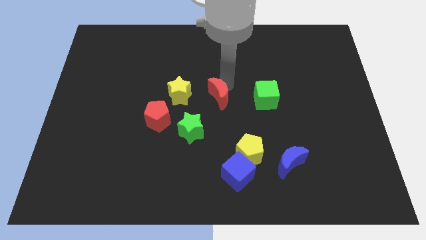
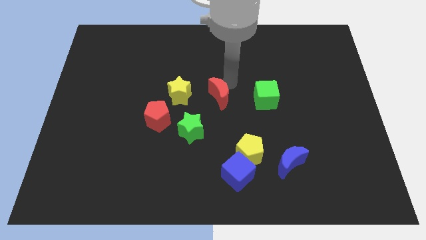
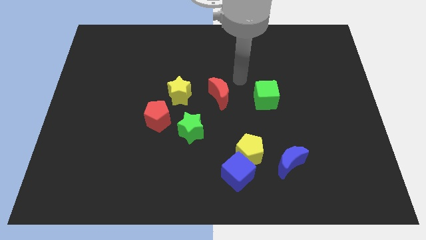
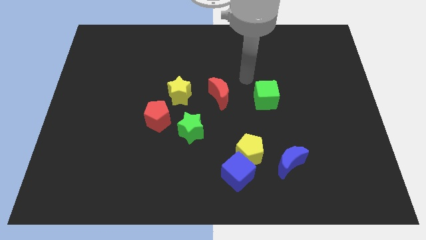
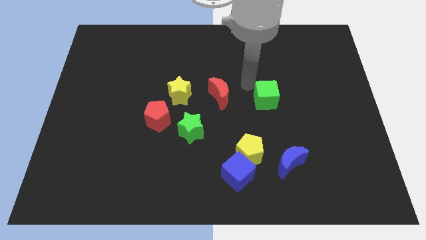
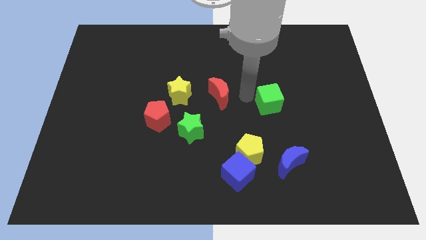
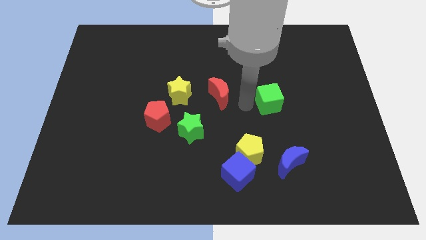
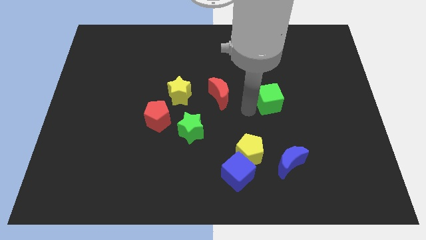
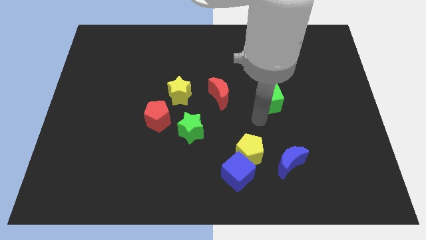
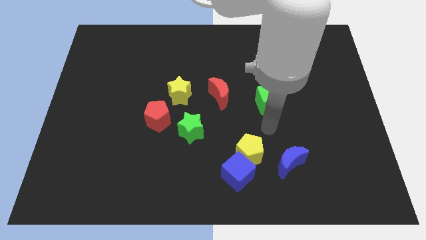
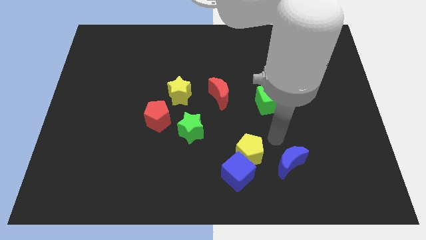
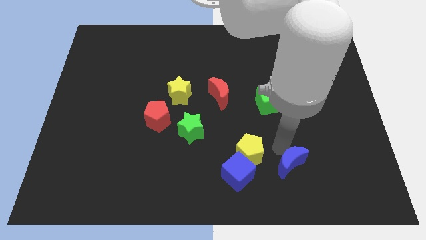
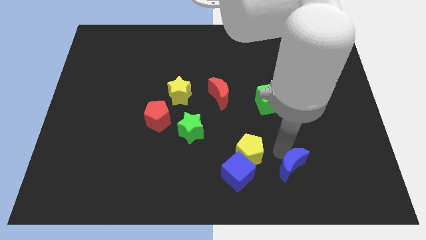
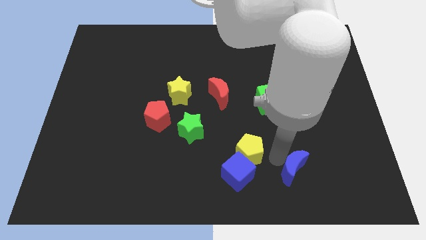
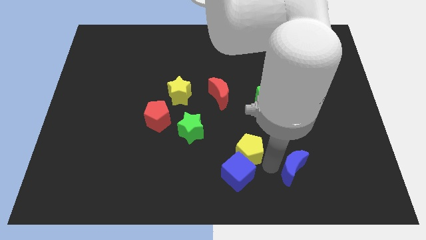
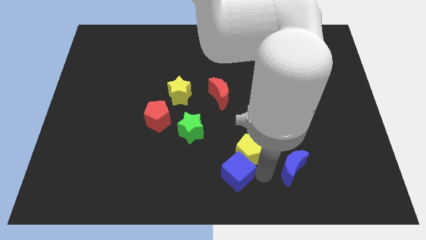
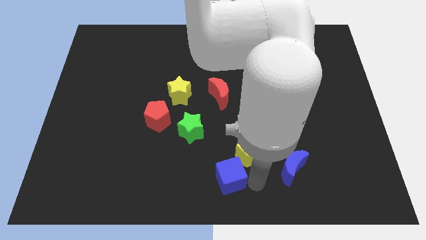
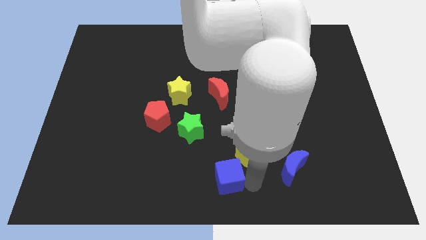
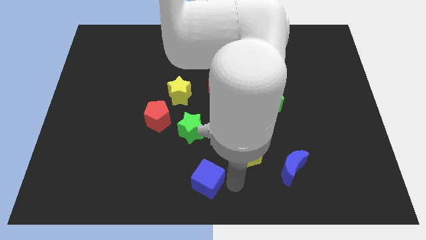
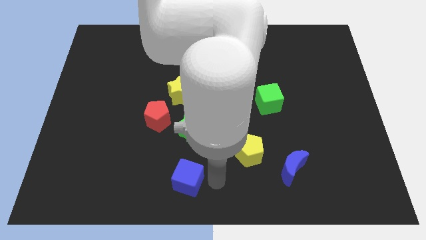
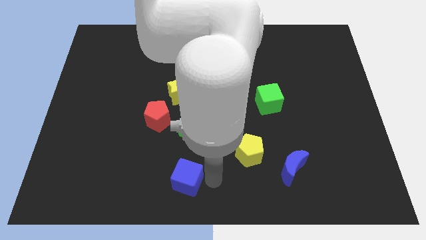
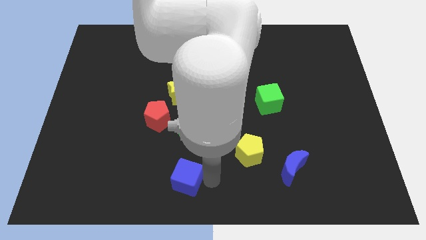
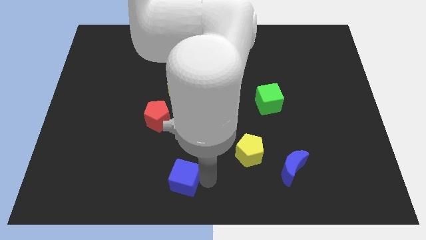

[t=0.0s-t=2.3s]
go and separate the blue cube from the yellow pentagon

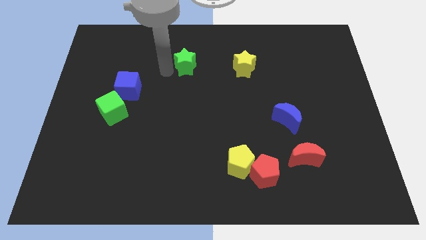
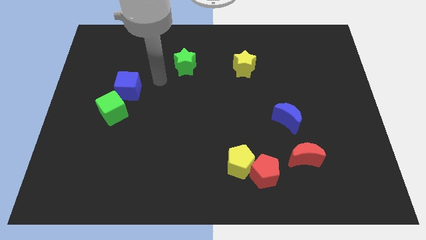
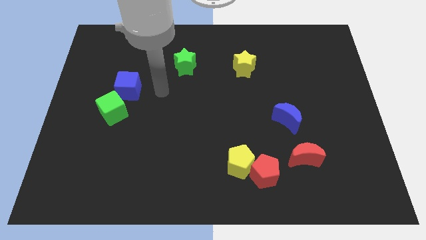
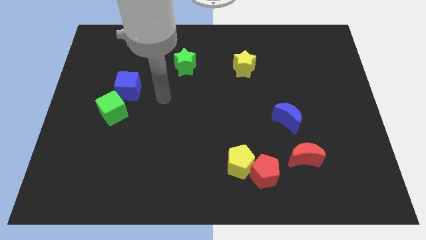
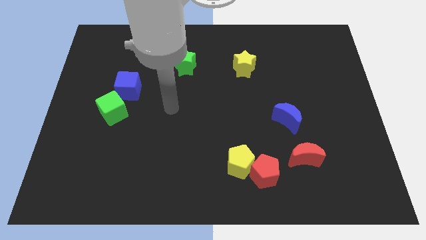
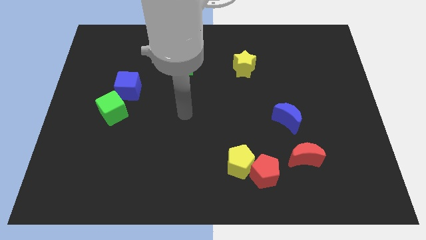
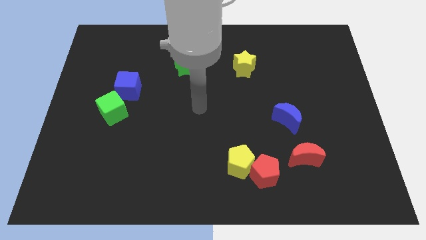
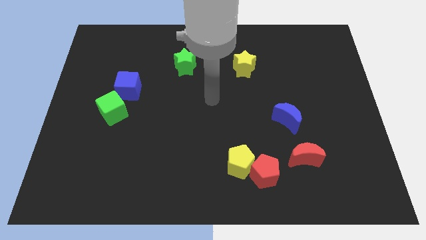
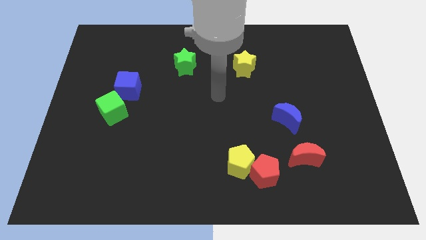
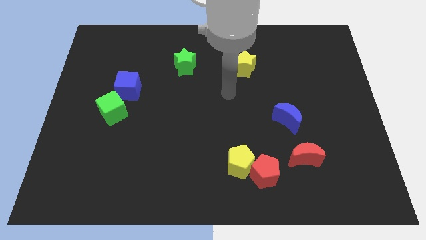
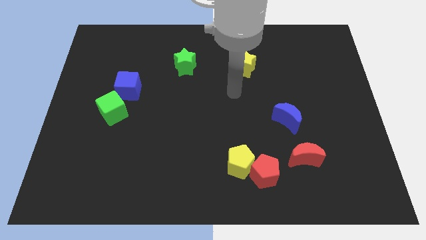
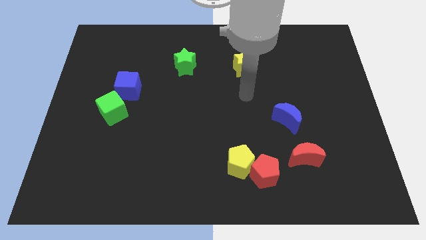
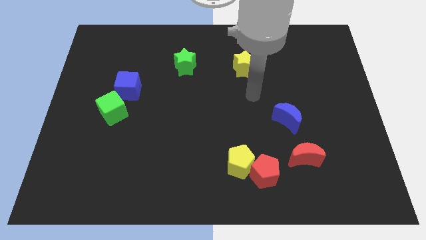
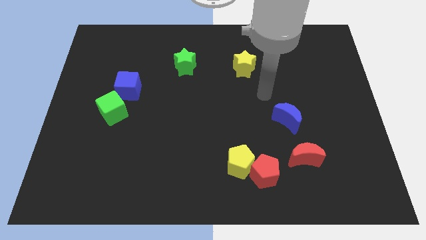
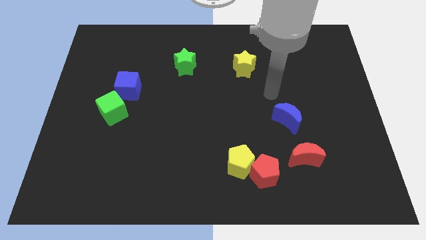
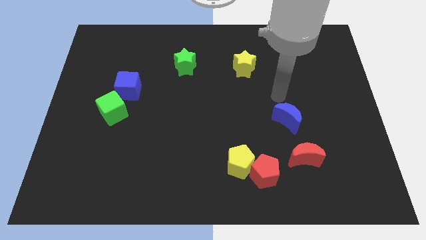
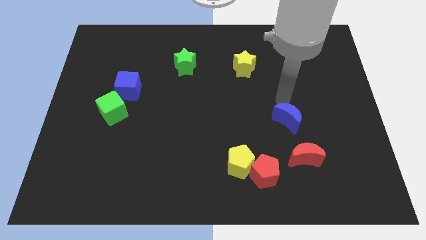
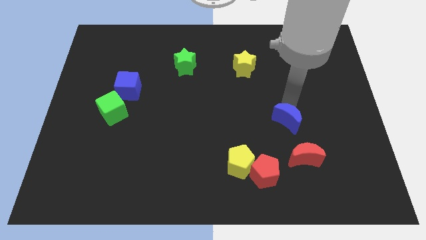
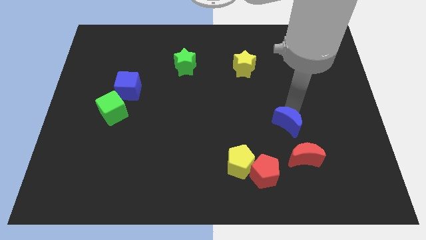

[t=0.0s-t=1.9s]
tap the blue crescent

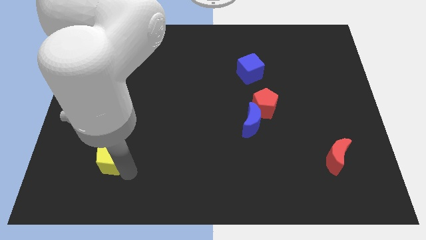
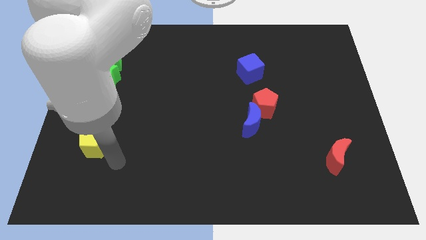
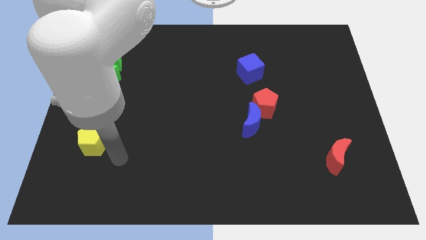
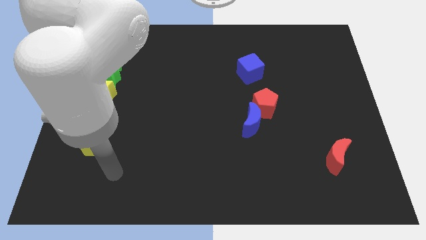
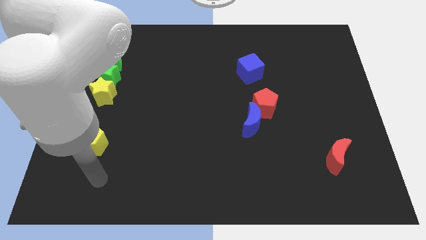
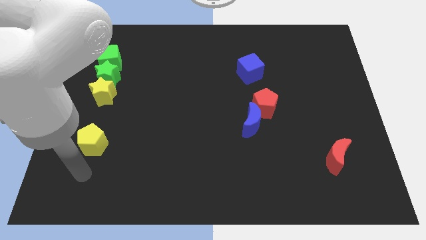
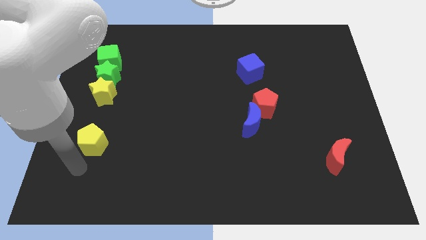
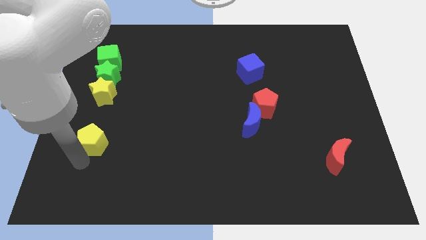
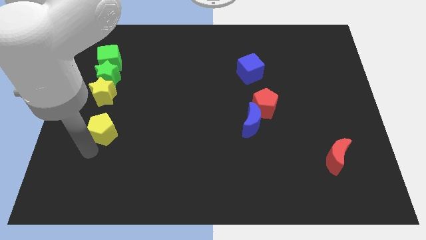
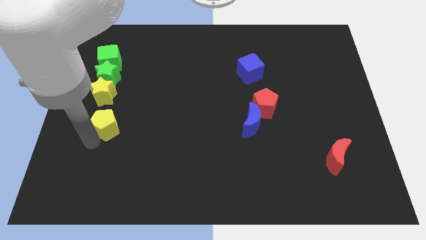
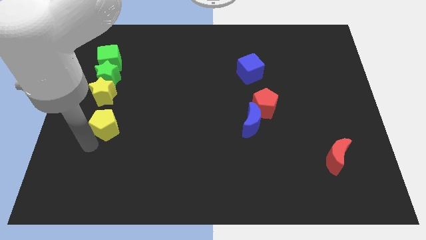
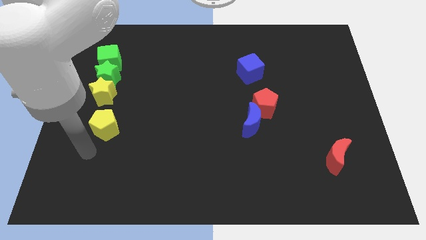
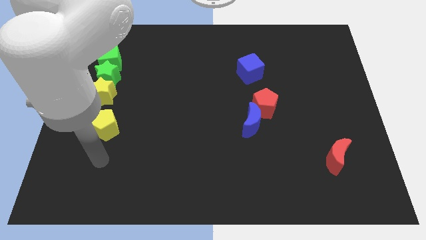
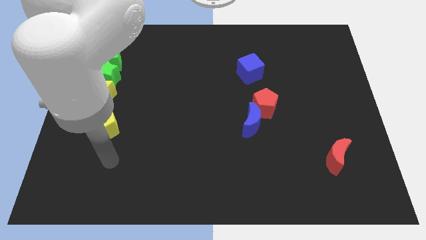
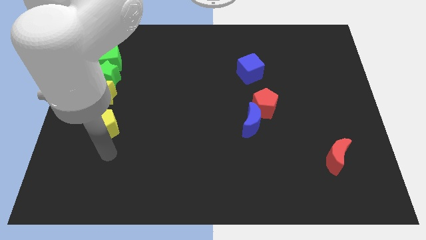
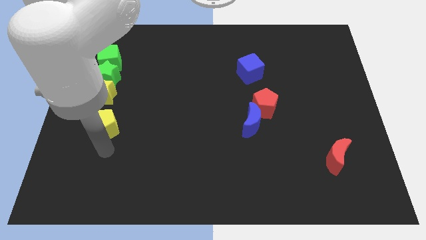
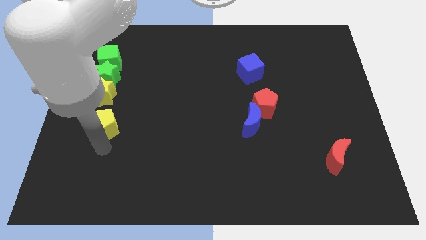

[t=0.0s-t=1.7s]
place the yellow pentagon below the yellow star

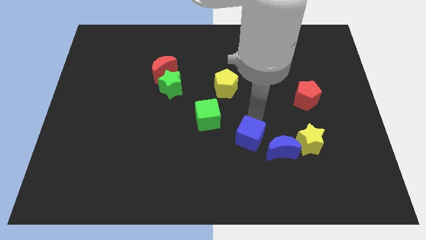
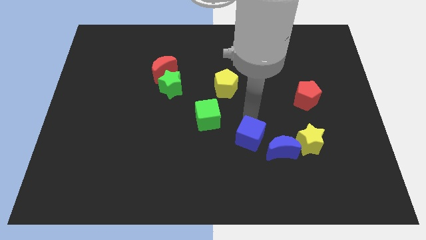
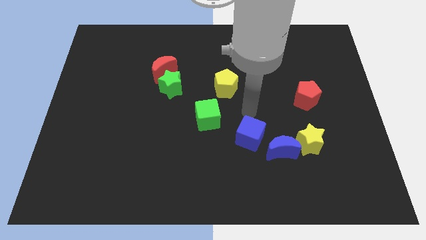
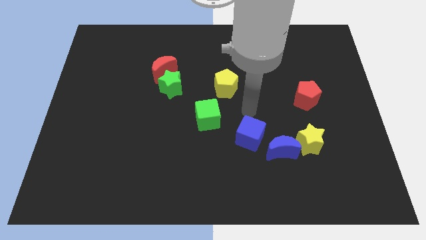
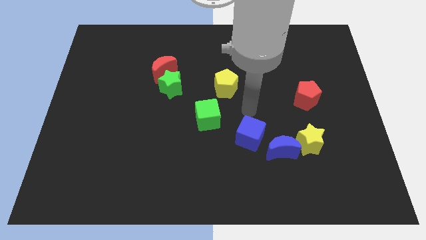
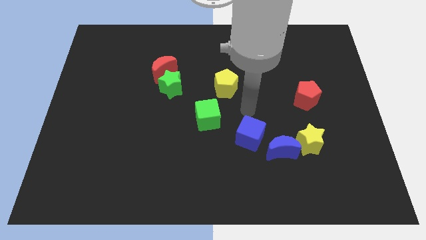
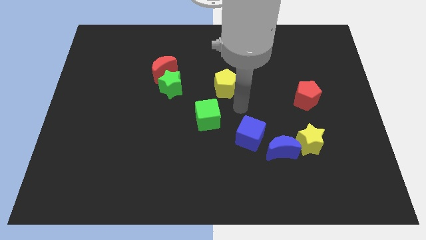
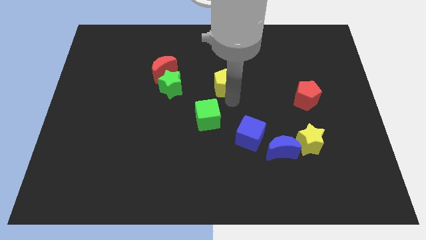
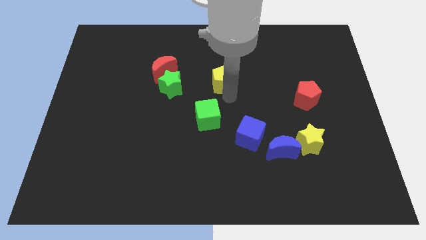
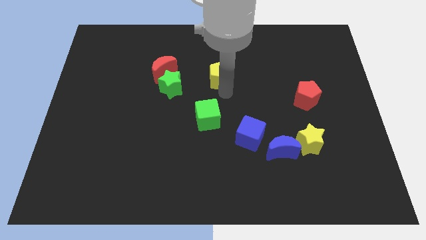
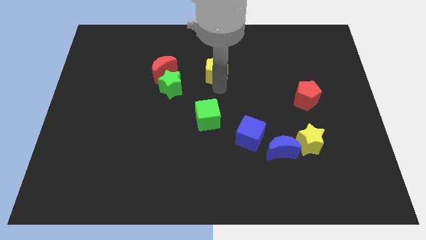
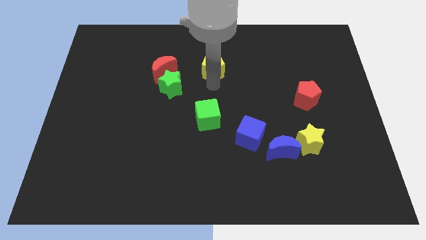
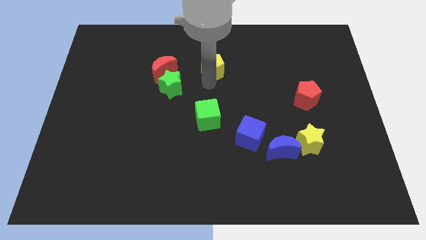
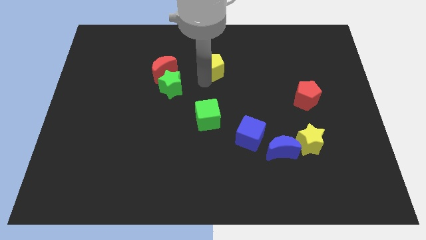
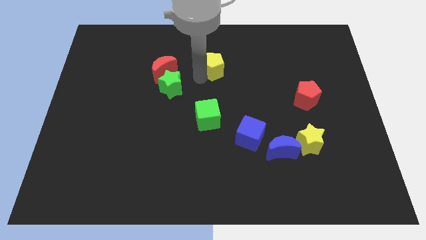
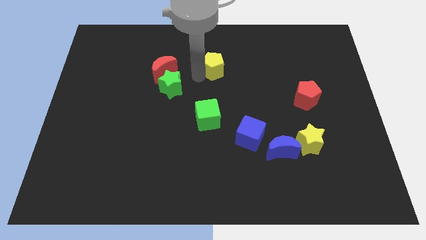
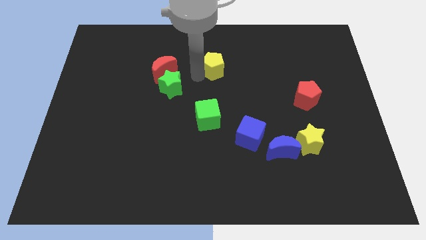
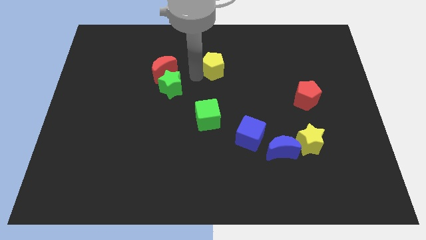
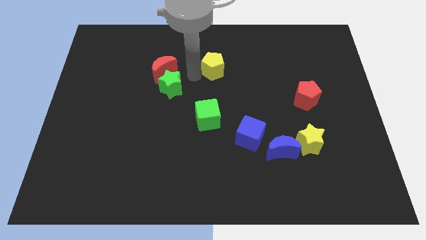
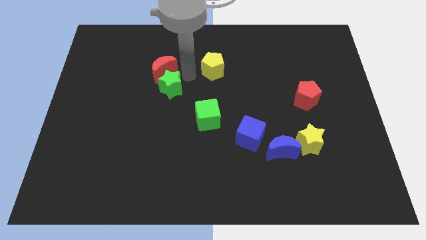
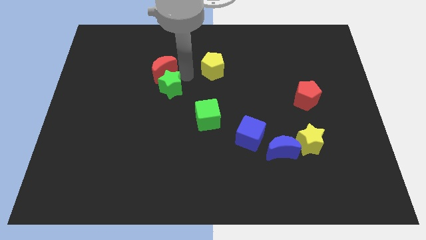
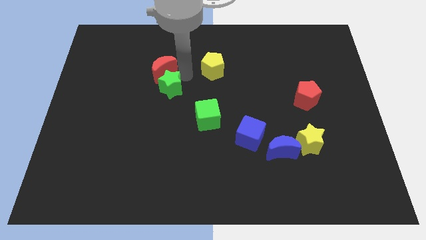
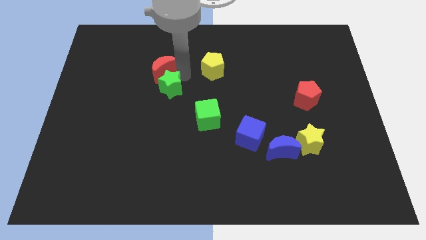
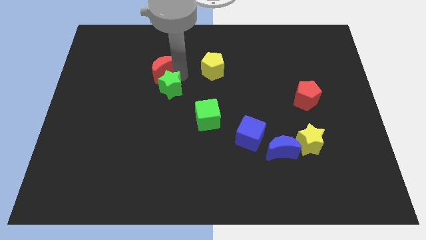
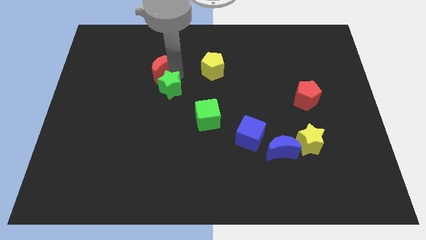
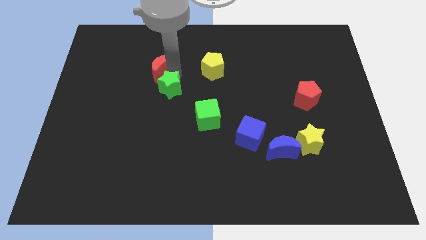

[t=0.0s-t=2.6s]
move the arm to the top of the green star

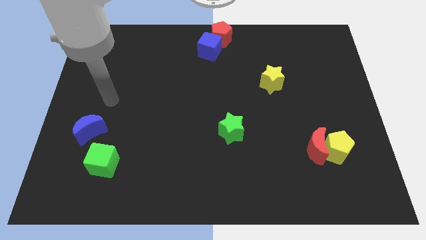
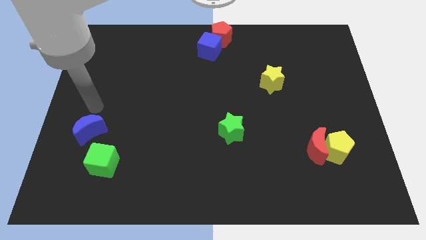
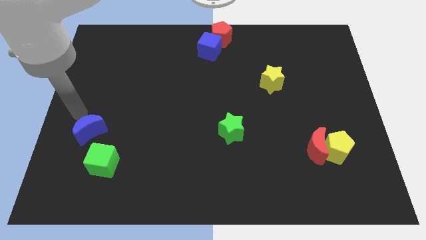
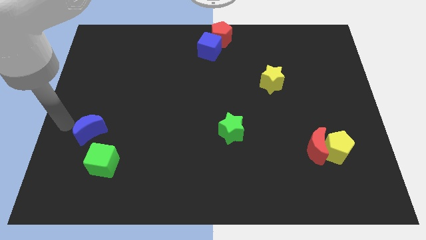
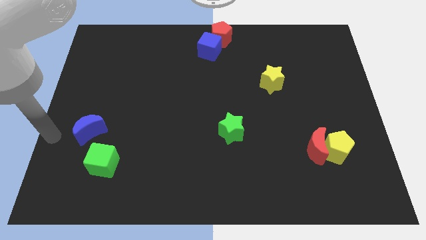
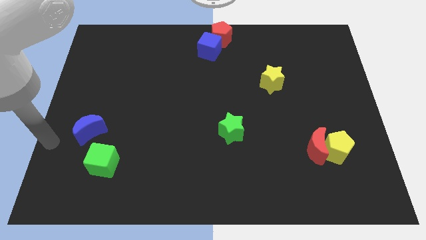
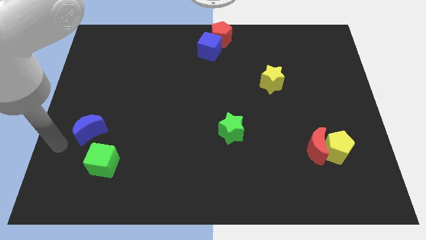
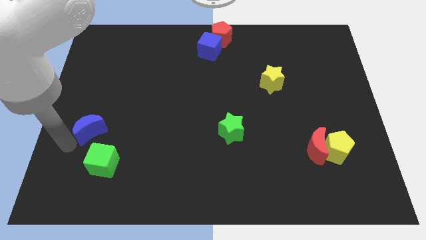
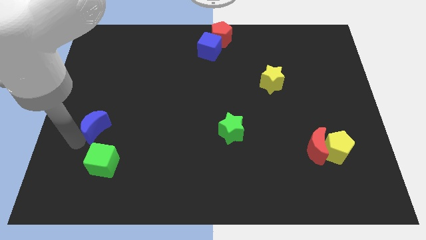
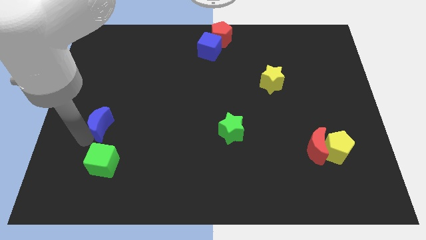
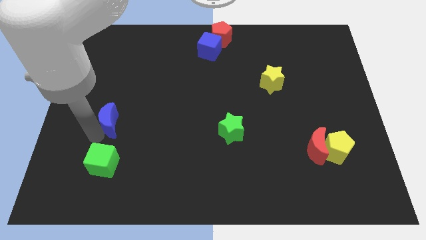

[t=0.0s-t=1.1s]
slide blue moon on top of green cube
